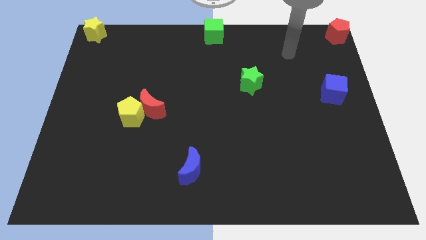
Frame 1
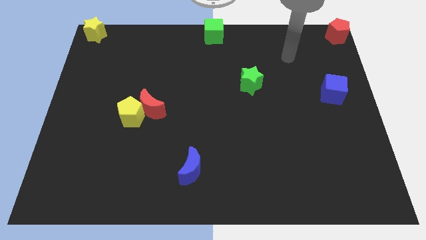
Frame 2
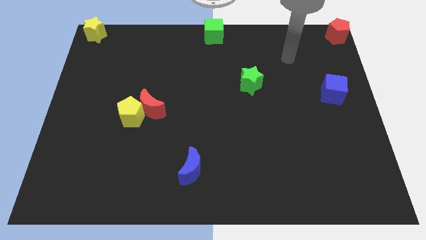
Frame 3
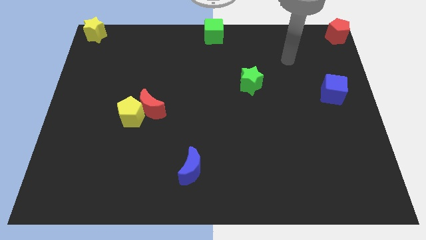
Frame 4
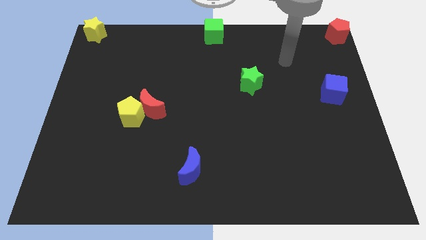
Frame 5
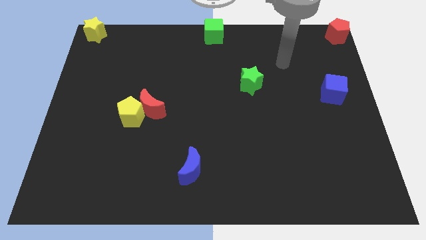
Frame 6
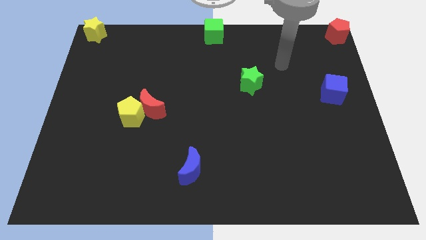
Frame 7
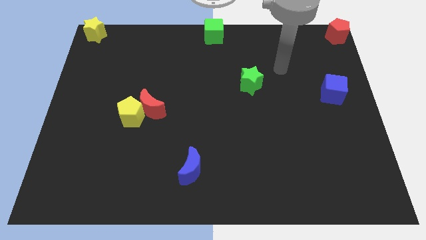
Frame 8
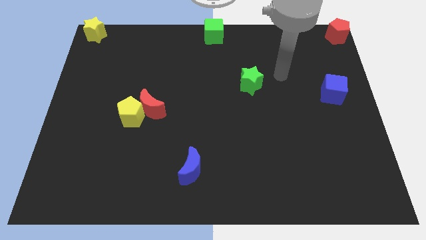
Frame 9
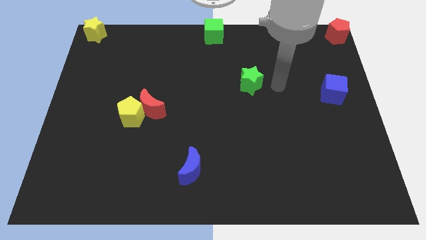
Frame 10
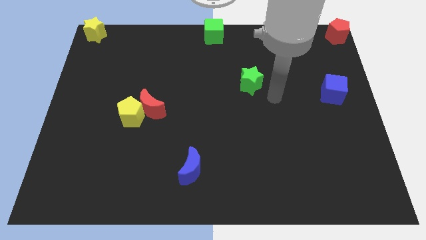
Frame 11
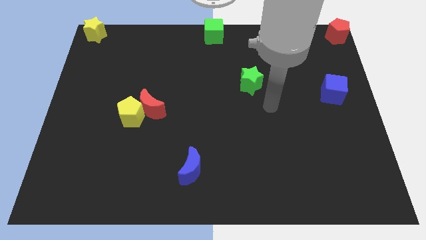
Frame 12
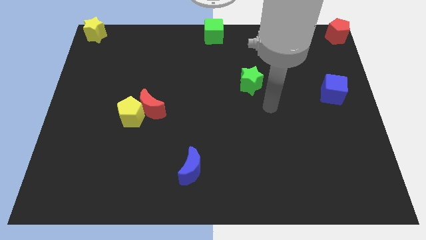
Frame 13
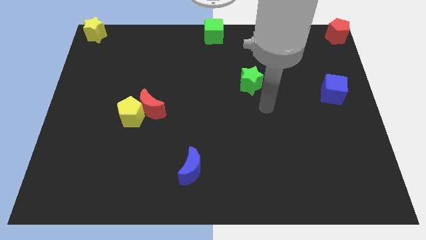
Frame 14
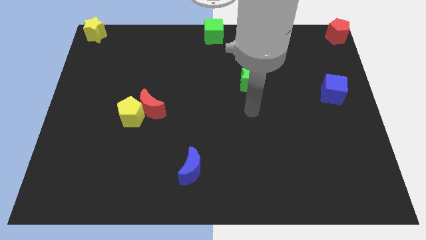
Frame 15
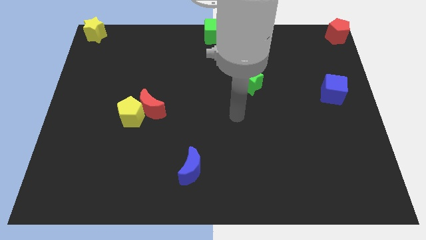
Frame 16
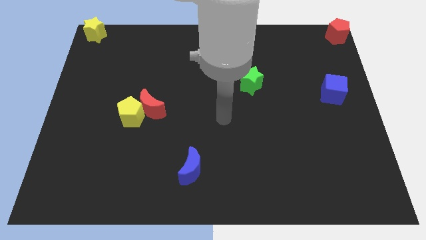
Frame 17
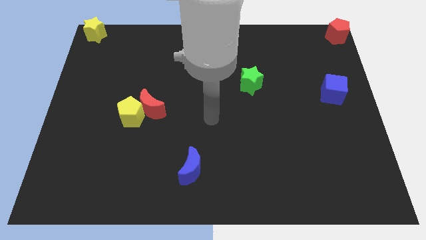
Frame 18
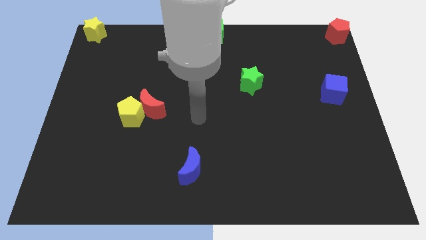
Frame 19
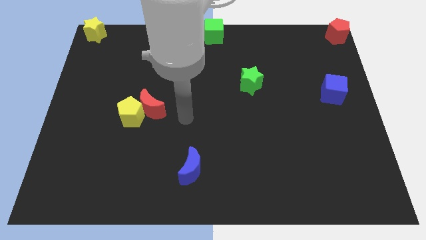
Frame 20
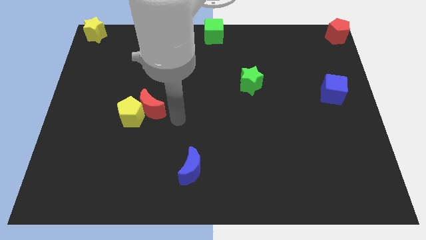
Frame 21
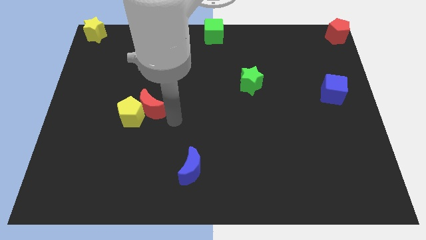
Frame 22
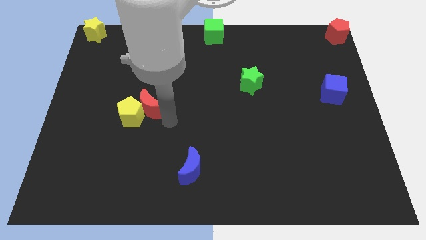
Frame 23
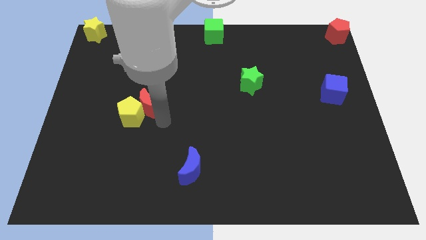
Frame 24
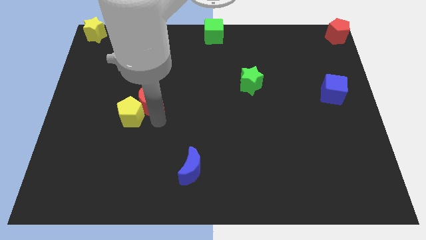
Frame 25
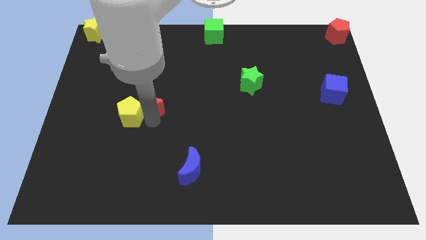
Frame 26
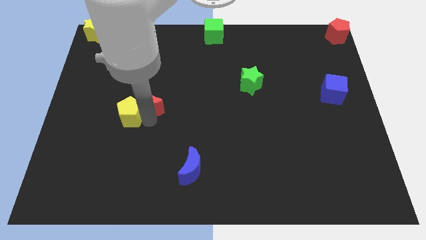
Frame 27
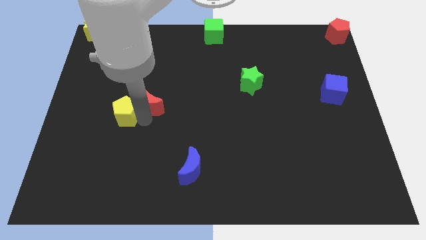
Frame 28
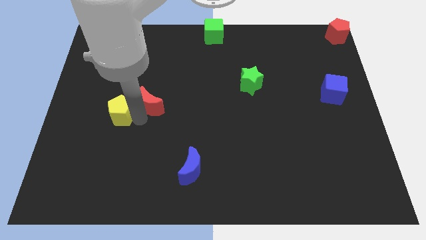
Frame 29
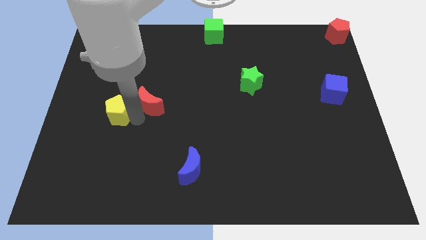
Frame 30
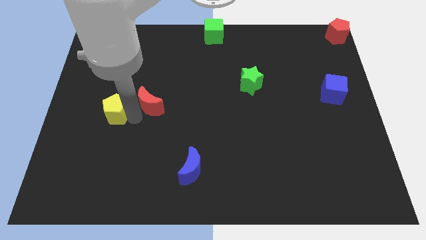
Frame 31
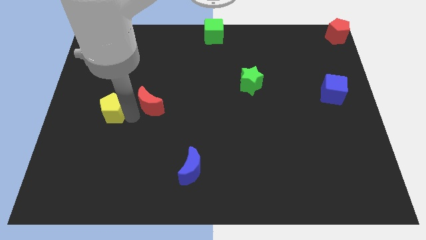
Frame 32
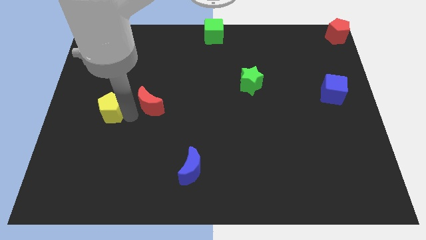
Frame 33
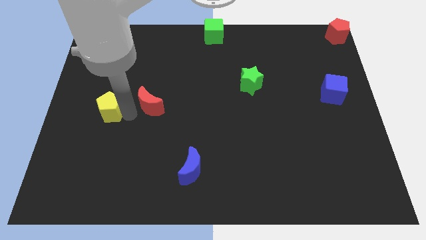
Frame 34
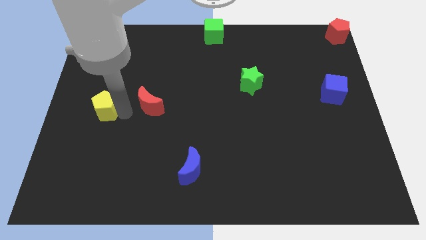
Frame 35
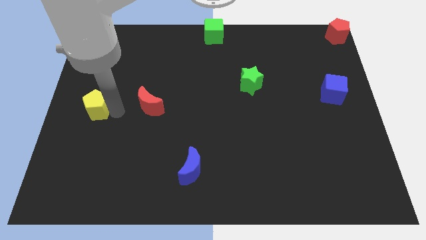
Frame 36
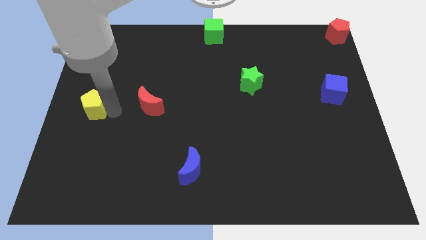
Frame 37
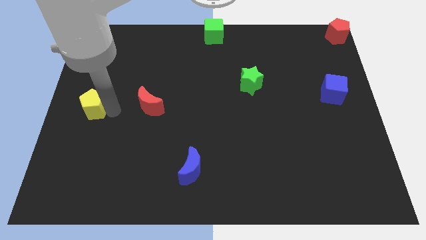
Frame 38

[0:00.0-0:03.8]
move the yellow pentagon towards left center

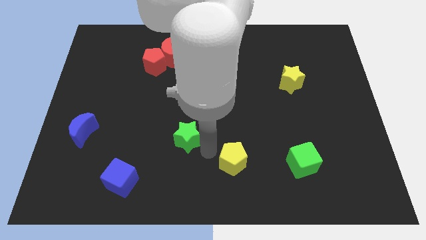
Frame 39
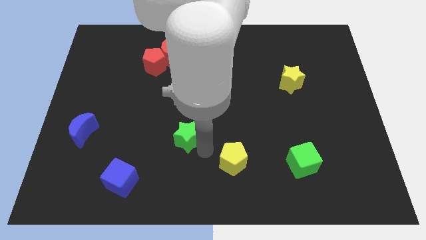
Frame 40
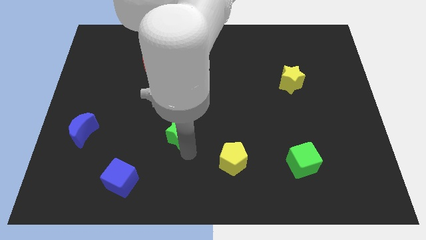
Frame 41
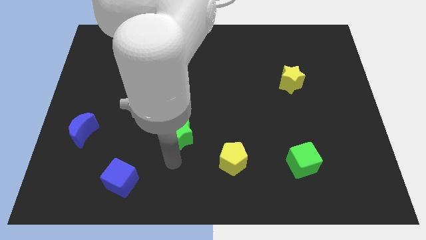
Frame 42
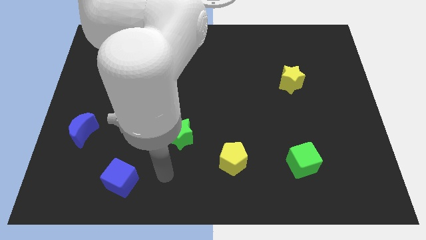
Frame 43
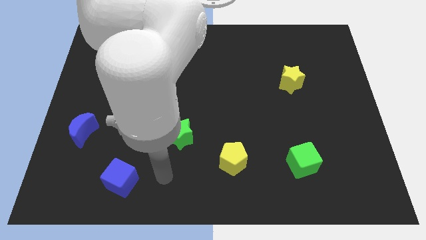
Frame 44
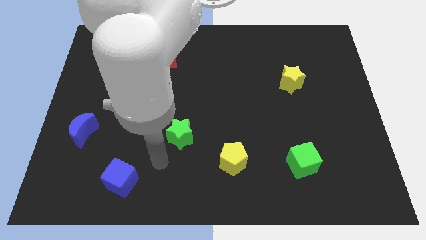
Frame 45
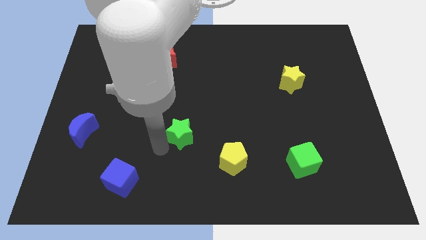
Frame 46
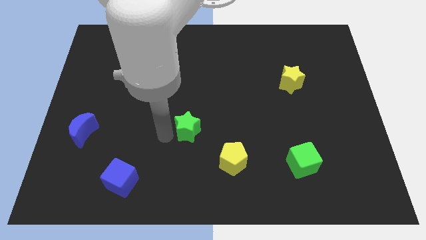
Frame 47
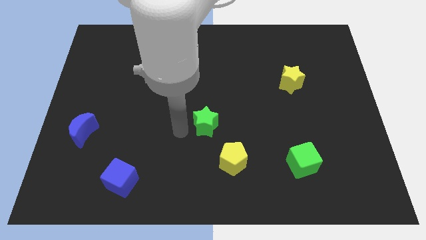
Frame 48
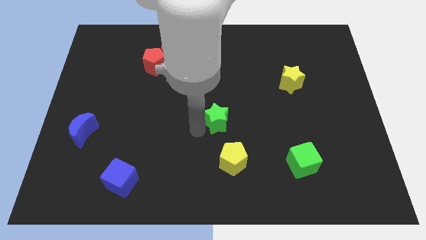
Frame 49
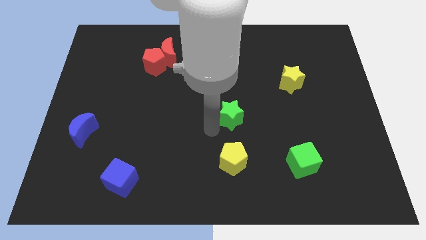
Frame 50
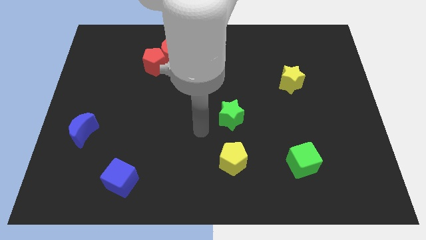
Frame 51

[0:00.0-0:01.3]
put the green star vertically above the yellow pentagon

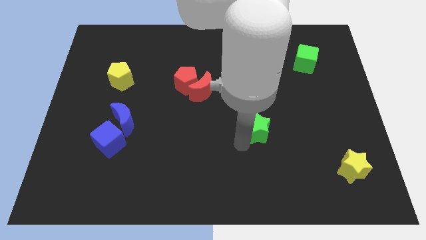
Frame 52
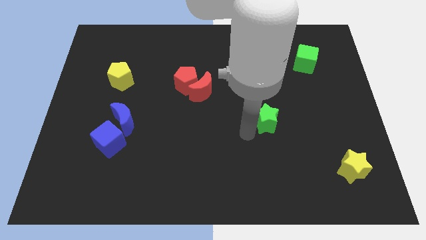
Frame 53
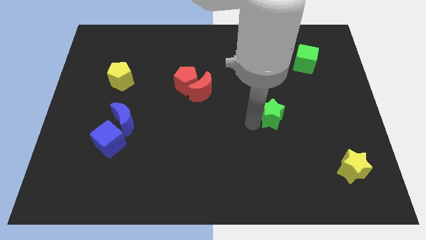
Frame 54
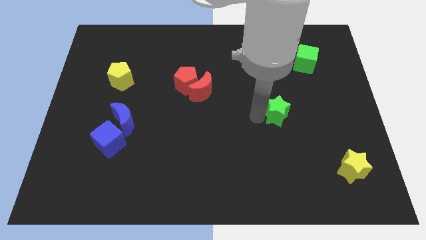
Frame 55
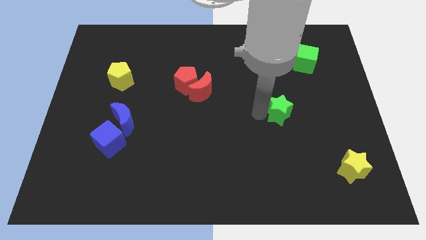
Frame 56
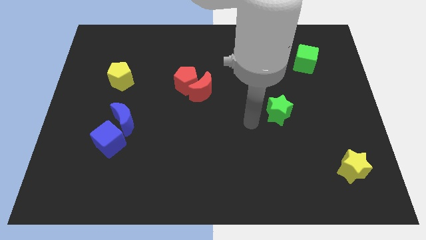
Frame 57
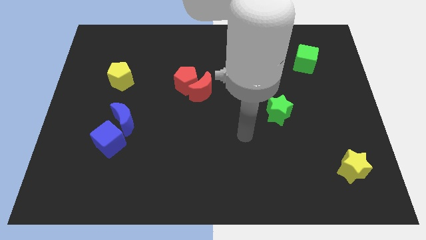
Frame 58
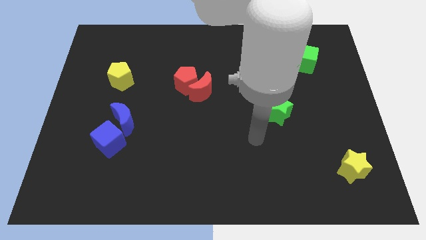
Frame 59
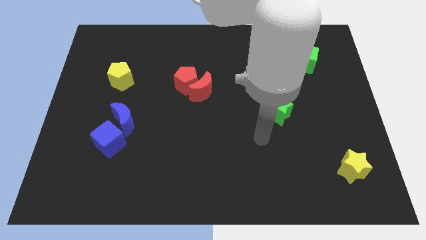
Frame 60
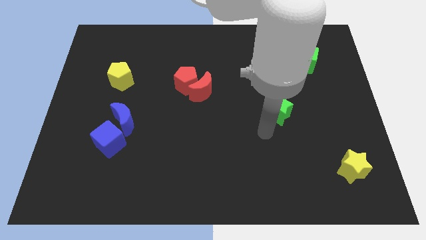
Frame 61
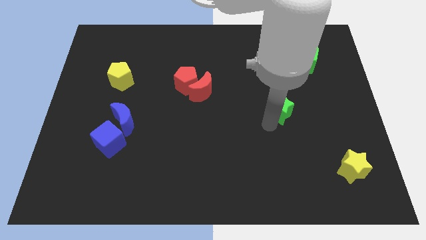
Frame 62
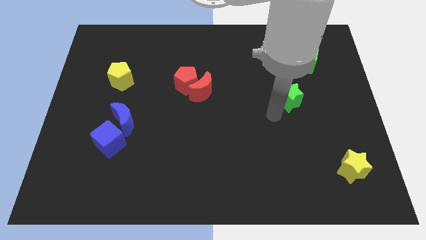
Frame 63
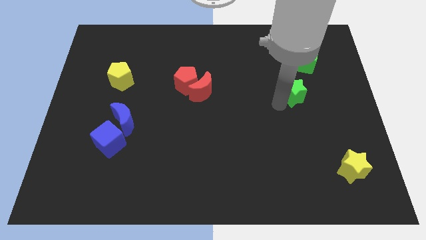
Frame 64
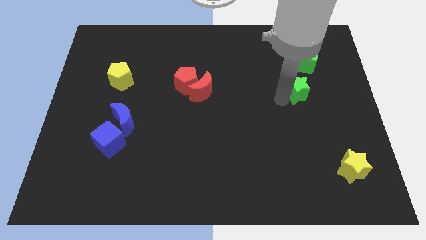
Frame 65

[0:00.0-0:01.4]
move the green star towards the green cube

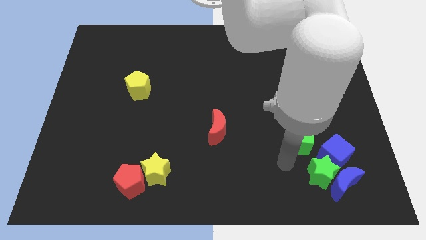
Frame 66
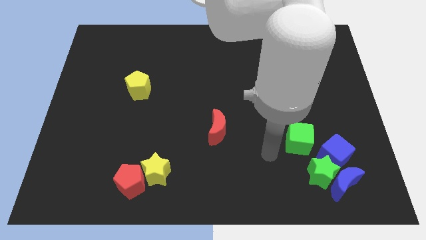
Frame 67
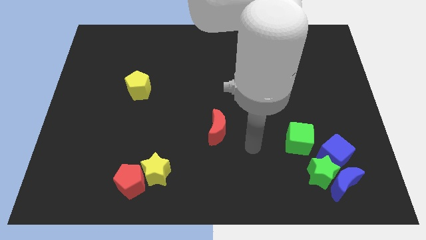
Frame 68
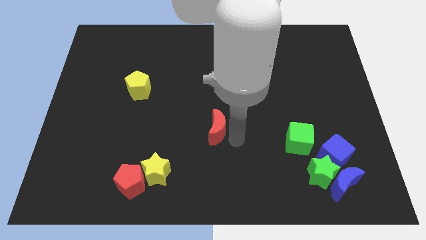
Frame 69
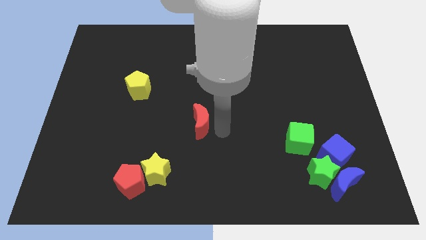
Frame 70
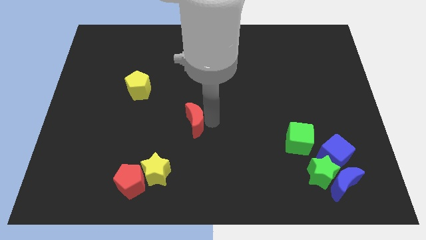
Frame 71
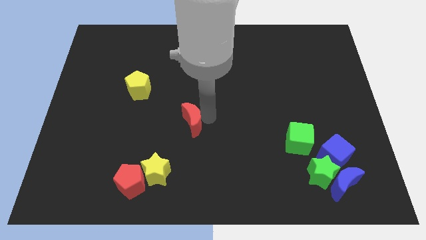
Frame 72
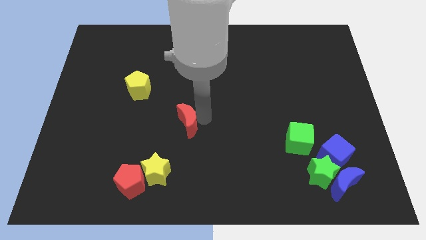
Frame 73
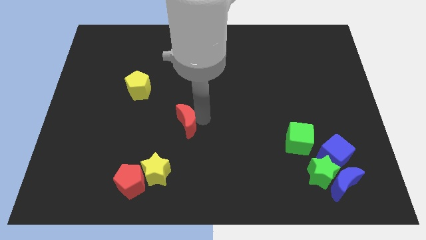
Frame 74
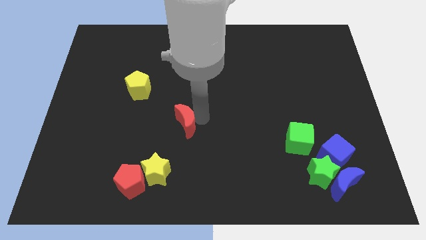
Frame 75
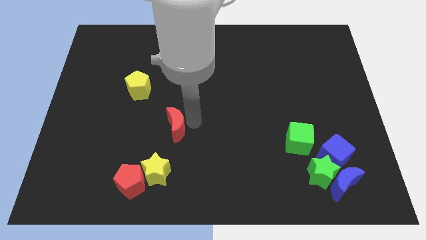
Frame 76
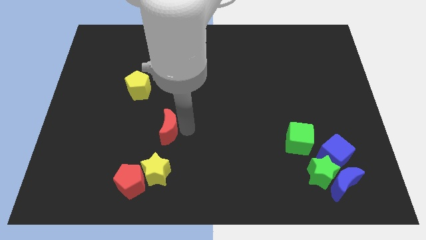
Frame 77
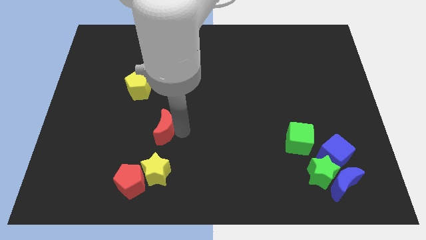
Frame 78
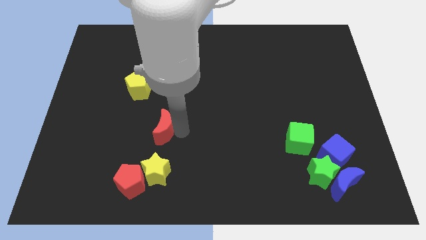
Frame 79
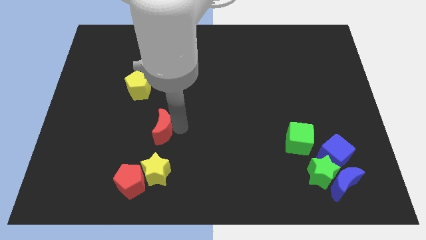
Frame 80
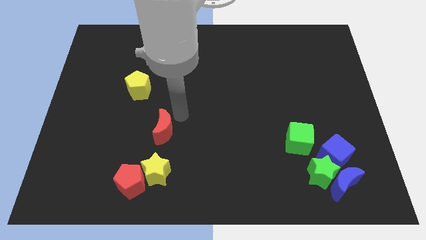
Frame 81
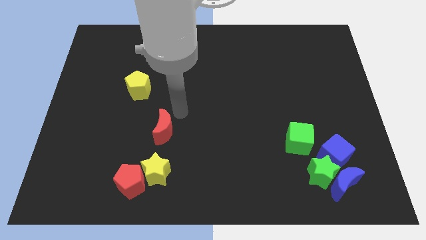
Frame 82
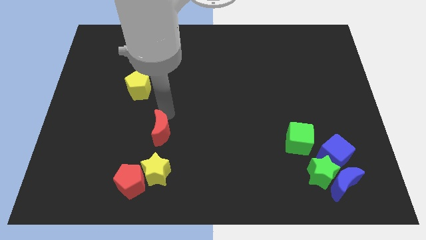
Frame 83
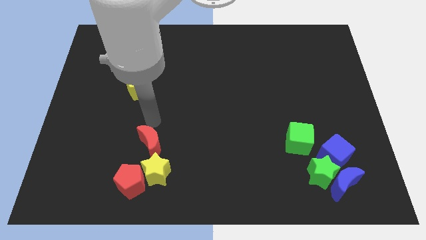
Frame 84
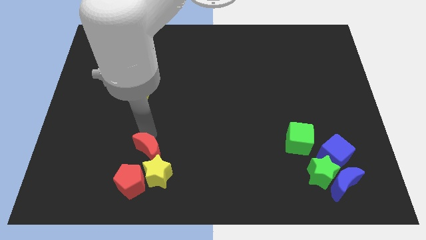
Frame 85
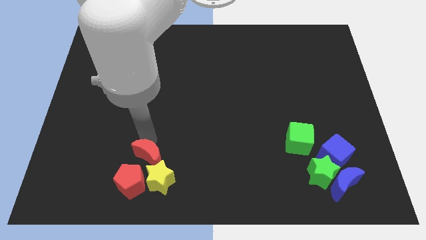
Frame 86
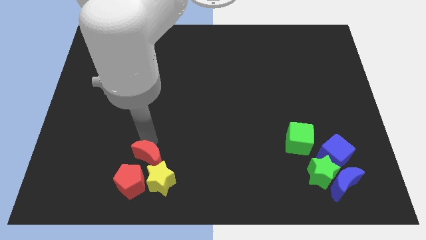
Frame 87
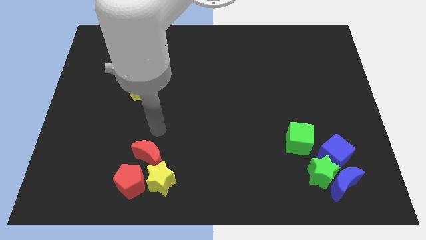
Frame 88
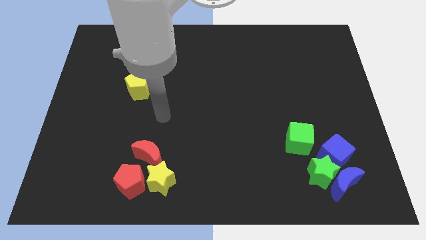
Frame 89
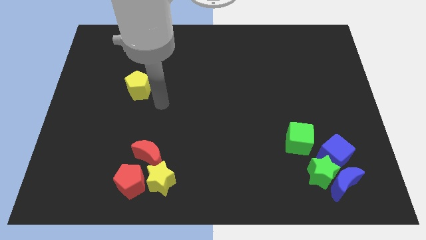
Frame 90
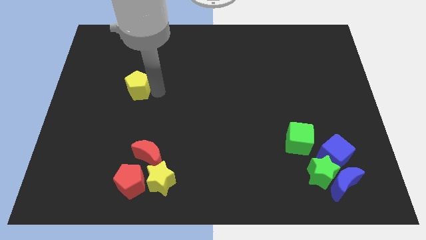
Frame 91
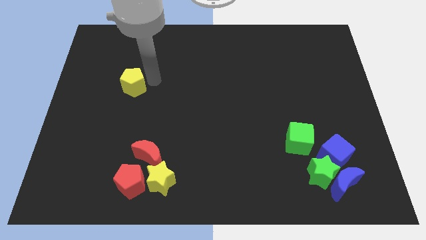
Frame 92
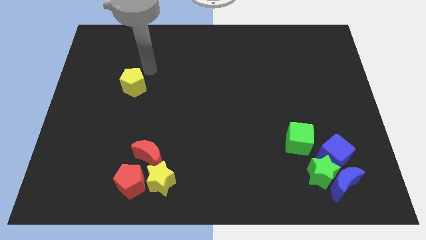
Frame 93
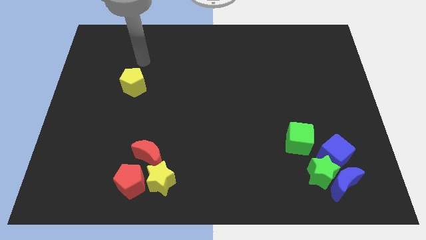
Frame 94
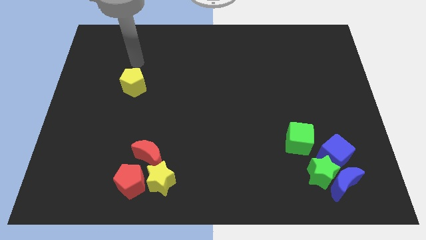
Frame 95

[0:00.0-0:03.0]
move the red crescent above the yellow star
